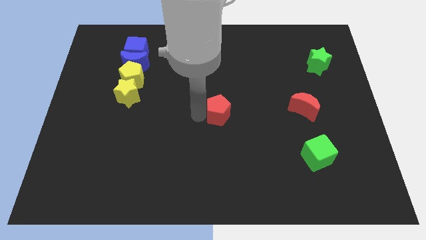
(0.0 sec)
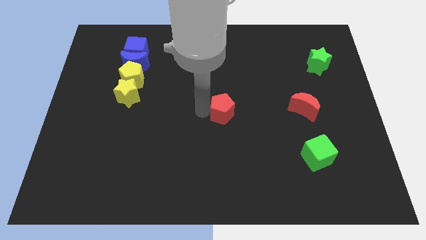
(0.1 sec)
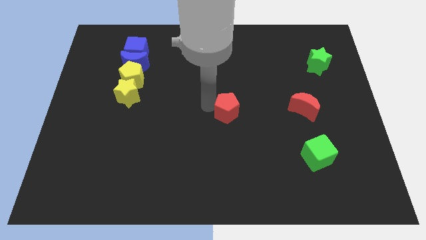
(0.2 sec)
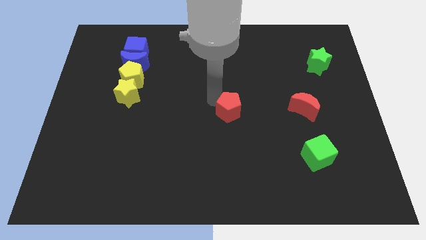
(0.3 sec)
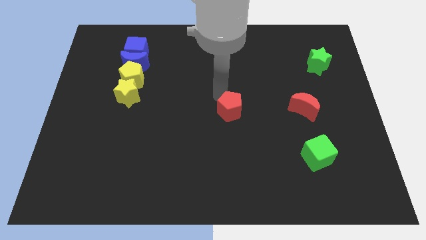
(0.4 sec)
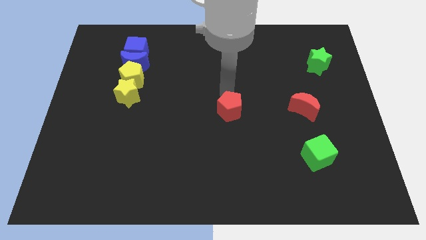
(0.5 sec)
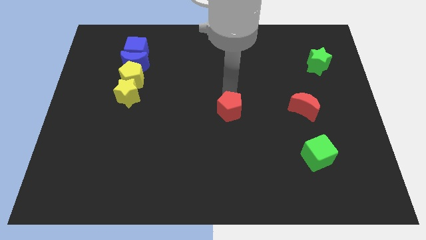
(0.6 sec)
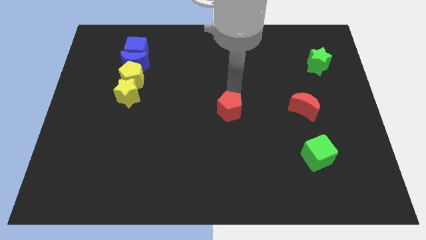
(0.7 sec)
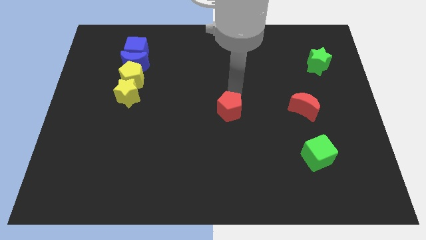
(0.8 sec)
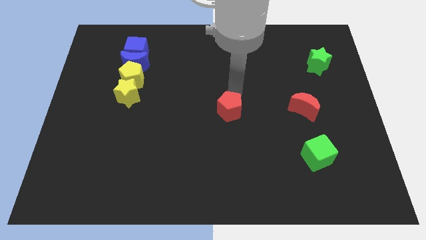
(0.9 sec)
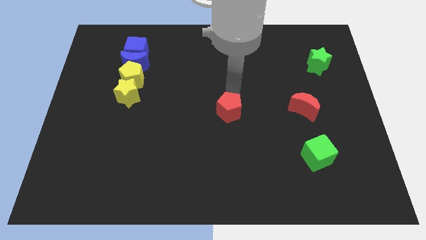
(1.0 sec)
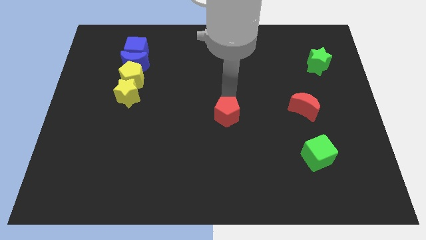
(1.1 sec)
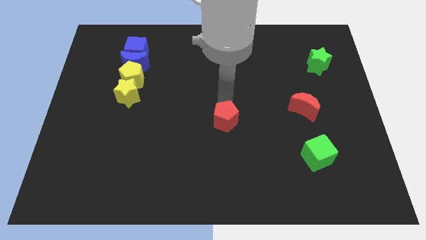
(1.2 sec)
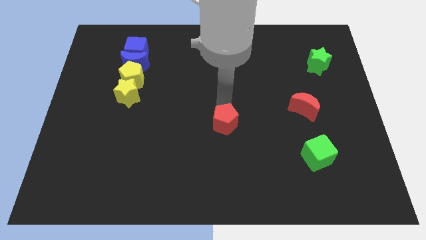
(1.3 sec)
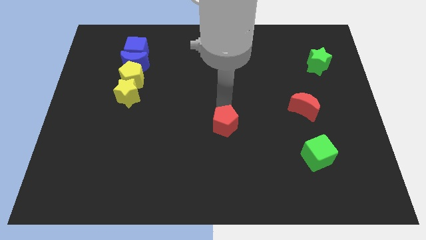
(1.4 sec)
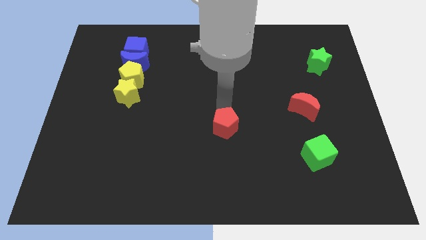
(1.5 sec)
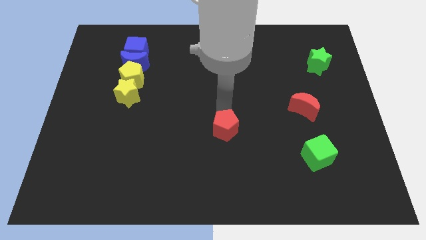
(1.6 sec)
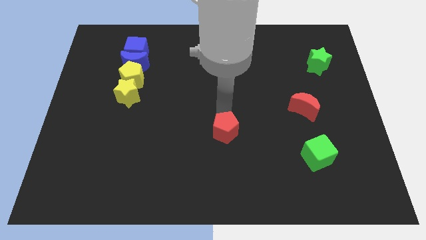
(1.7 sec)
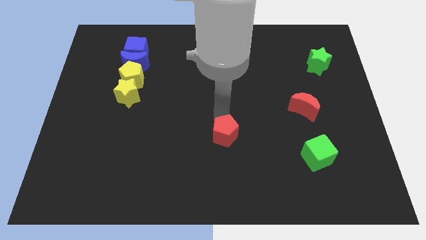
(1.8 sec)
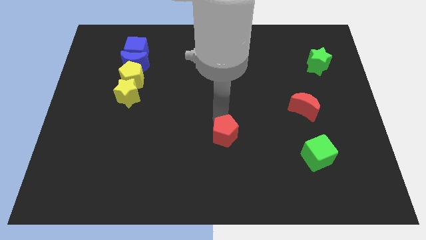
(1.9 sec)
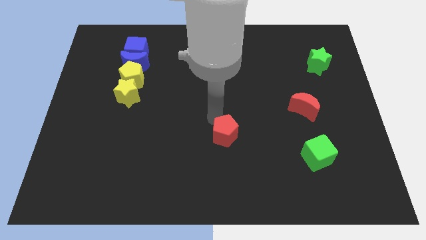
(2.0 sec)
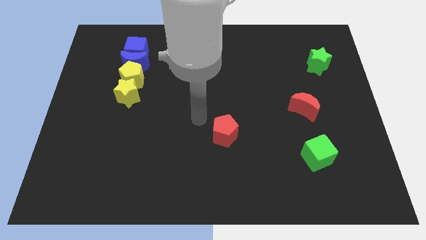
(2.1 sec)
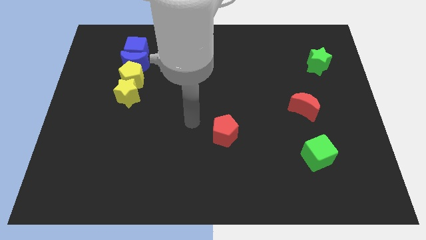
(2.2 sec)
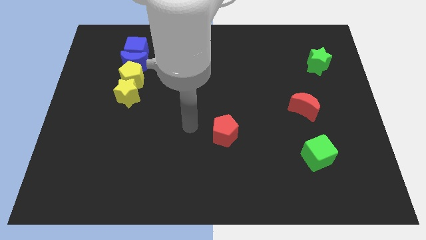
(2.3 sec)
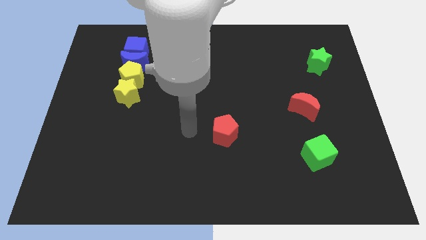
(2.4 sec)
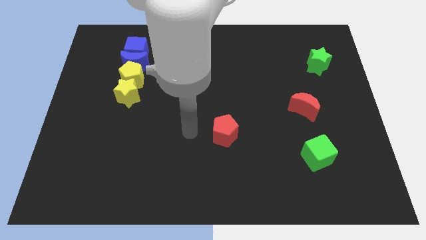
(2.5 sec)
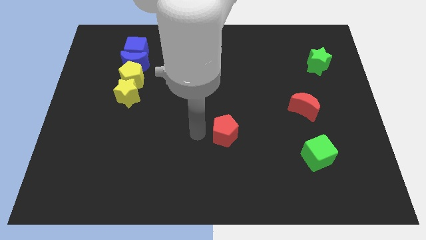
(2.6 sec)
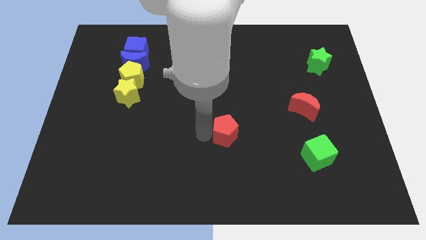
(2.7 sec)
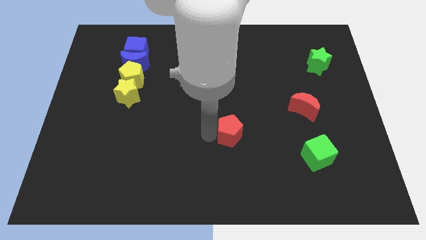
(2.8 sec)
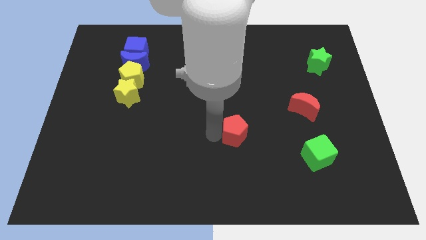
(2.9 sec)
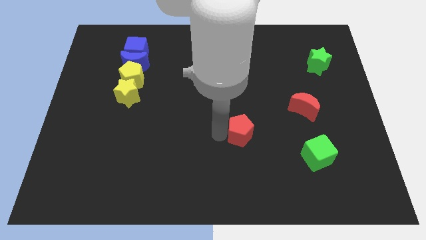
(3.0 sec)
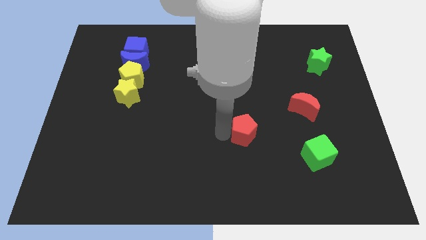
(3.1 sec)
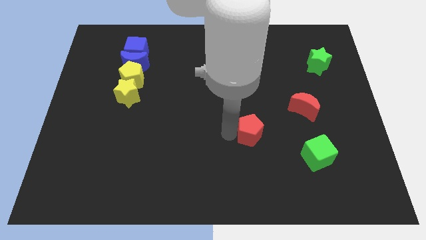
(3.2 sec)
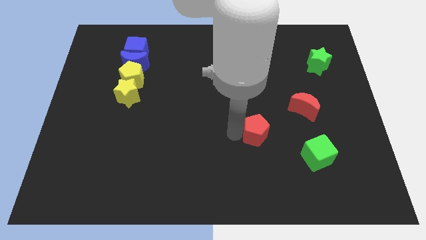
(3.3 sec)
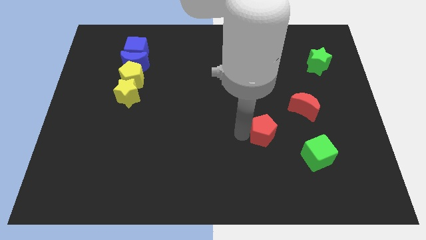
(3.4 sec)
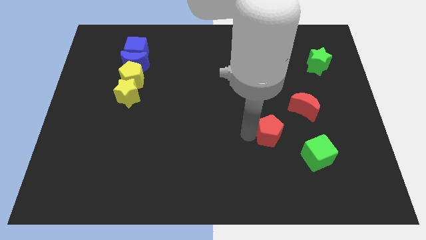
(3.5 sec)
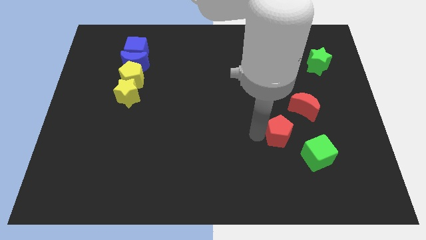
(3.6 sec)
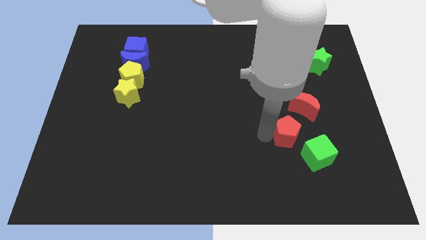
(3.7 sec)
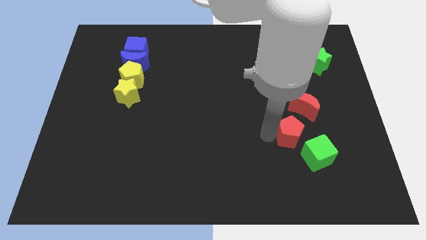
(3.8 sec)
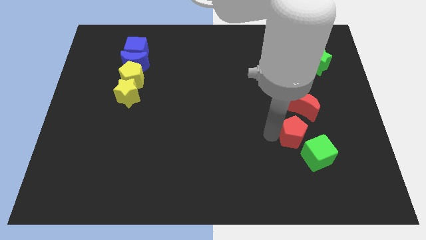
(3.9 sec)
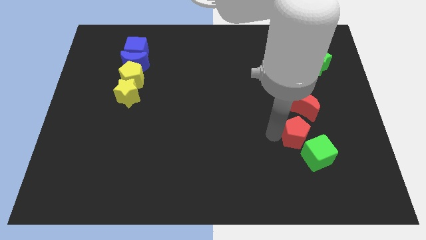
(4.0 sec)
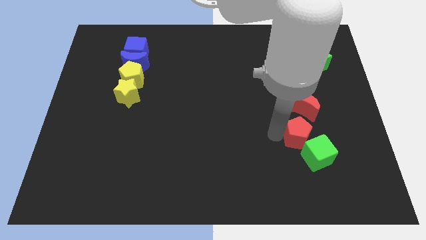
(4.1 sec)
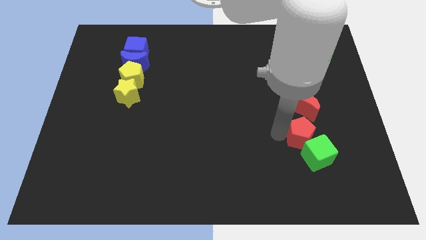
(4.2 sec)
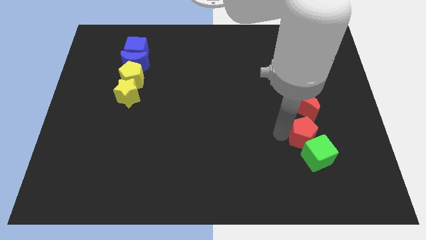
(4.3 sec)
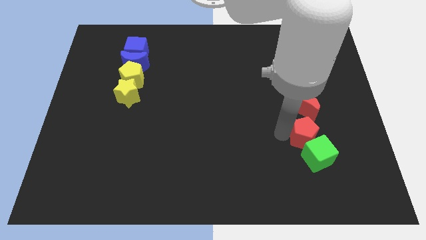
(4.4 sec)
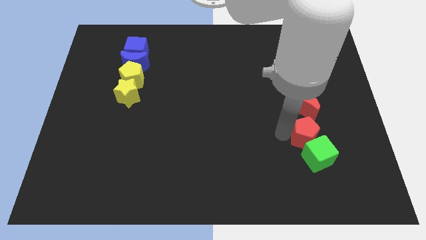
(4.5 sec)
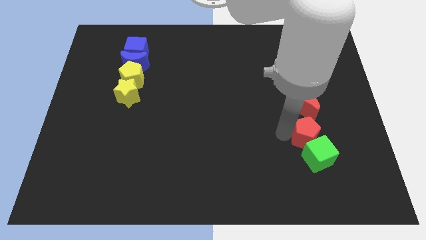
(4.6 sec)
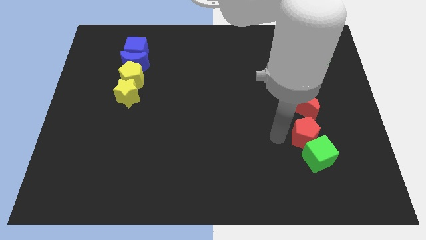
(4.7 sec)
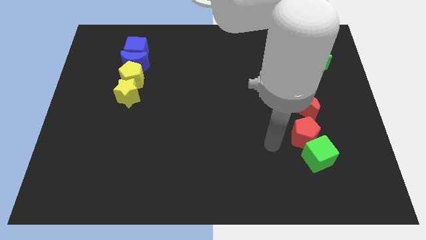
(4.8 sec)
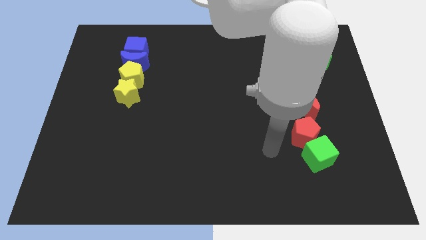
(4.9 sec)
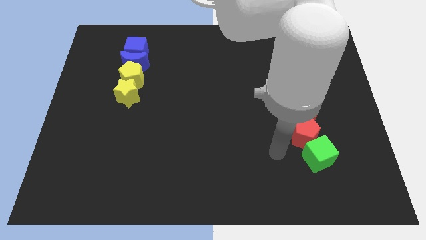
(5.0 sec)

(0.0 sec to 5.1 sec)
place the red pentagon above the green cube

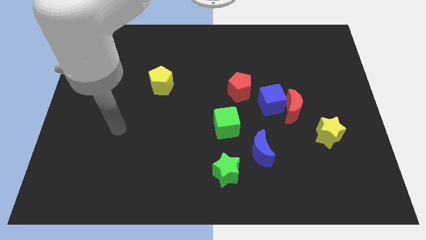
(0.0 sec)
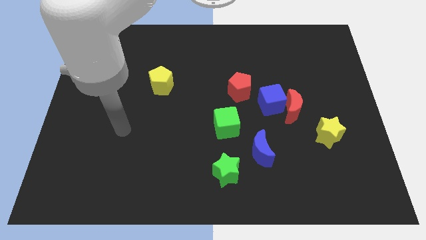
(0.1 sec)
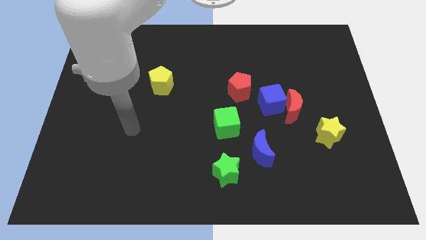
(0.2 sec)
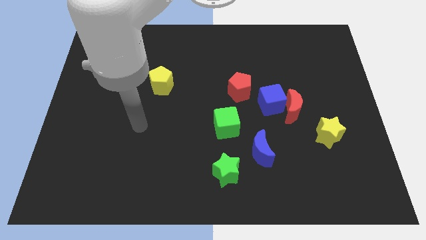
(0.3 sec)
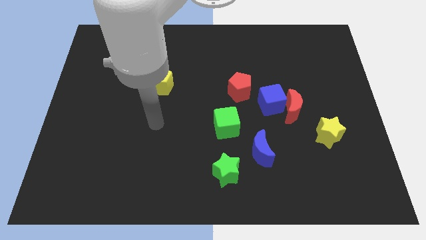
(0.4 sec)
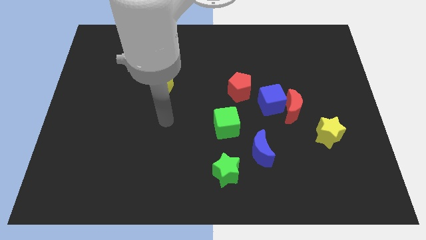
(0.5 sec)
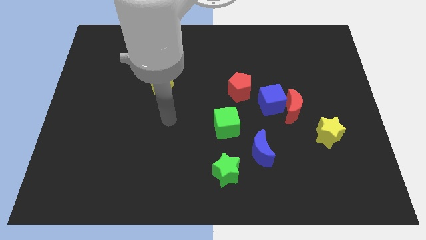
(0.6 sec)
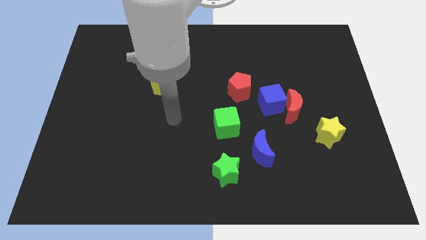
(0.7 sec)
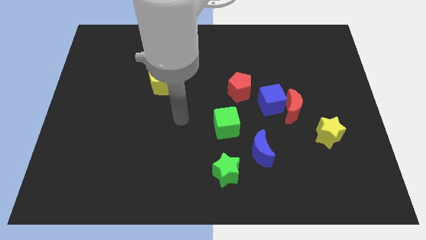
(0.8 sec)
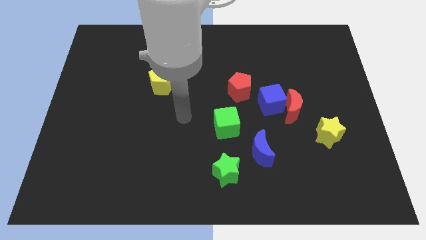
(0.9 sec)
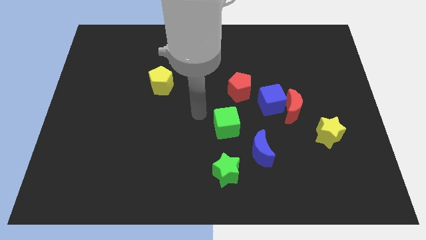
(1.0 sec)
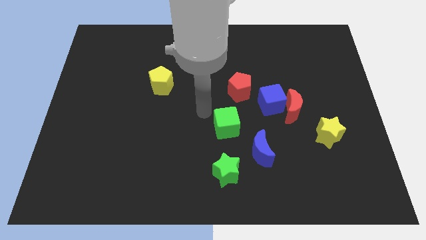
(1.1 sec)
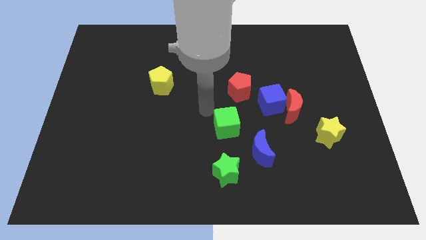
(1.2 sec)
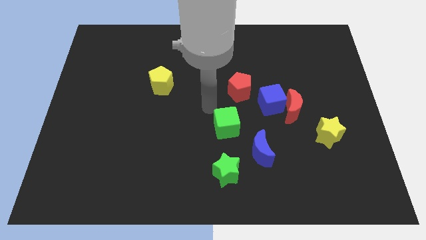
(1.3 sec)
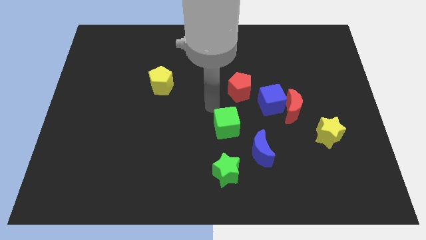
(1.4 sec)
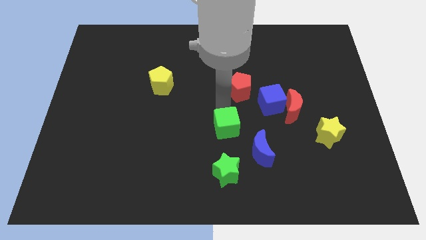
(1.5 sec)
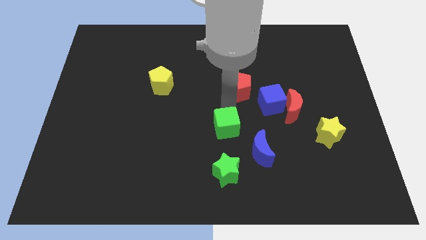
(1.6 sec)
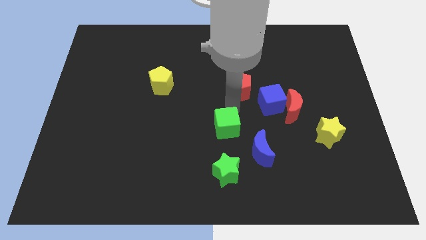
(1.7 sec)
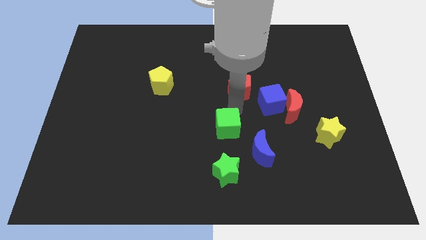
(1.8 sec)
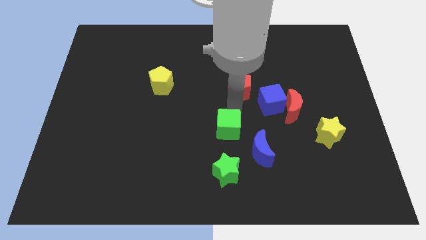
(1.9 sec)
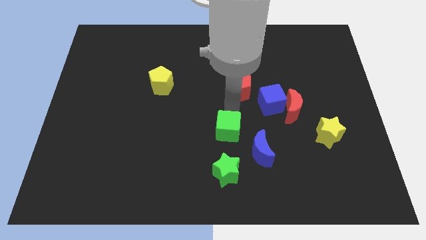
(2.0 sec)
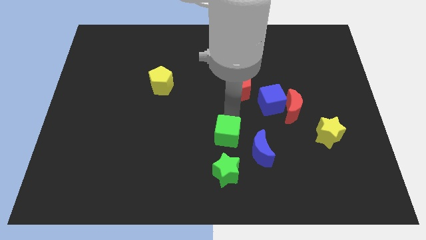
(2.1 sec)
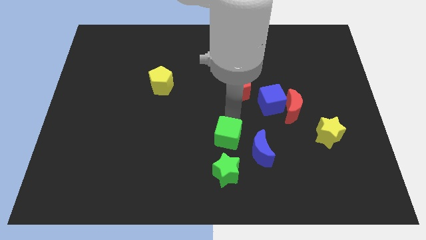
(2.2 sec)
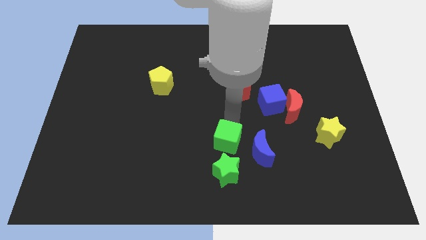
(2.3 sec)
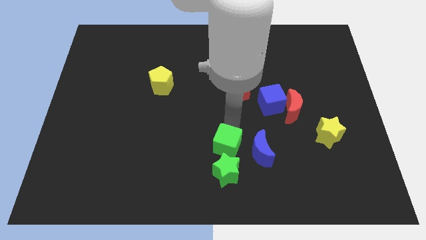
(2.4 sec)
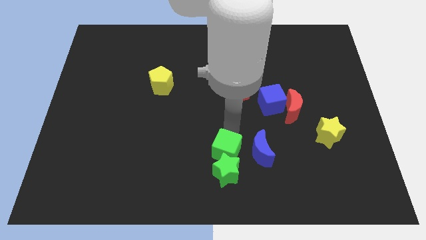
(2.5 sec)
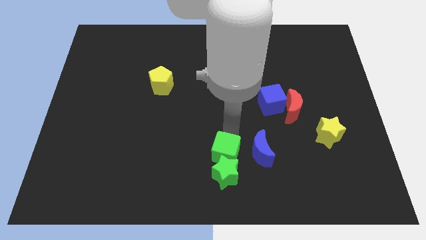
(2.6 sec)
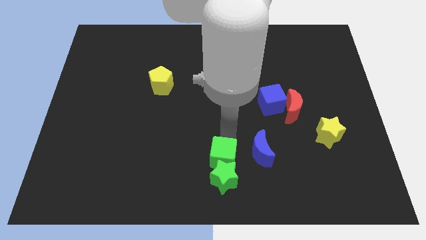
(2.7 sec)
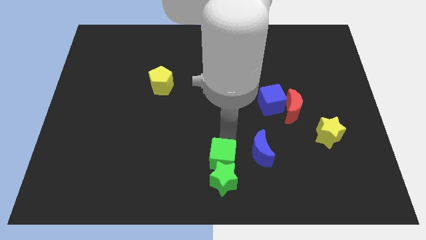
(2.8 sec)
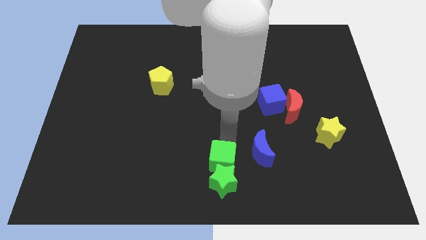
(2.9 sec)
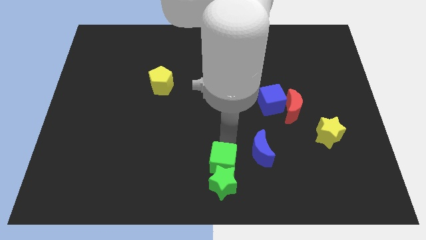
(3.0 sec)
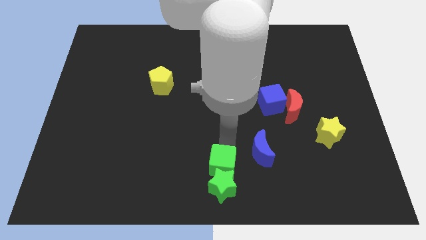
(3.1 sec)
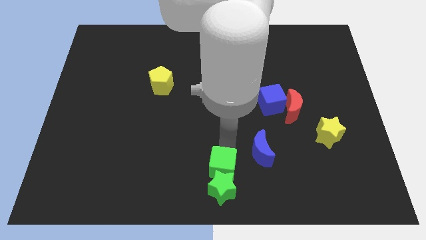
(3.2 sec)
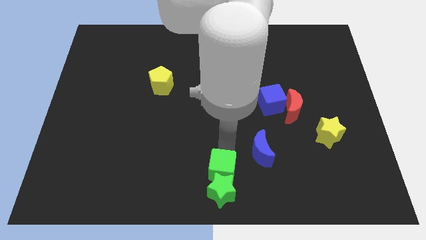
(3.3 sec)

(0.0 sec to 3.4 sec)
push green cube slightly to the downwards

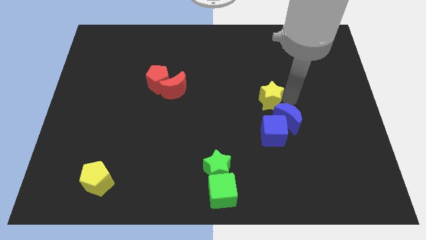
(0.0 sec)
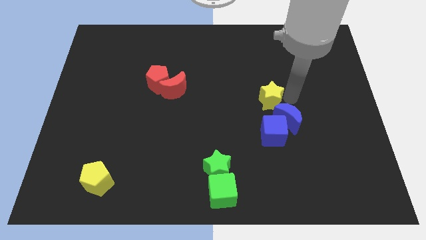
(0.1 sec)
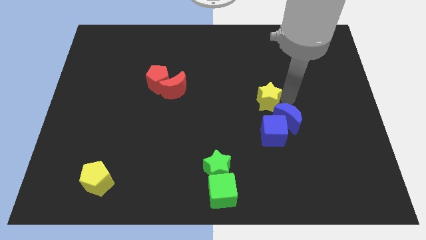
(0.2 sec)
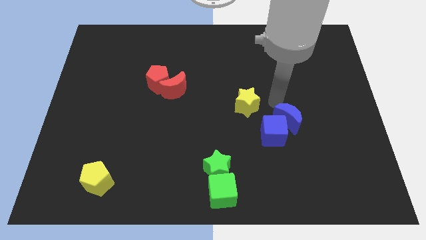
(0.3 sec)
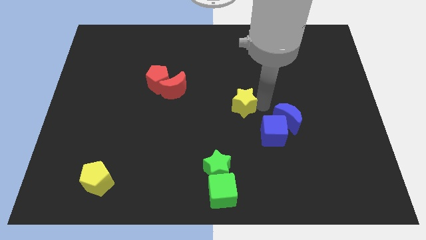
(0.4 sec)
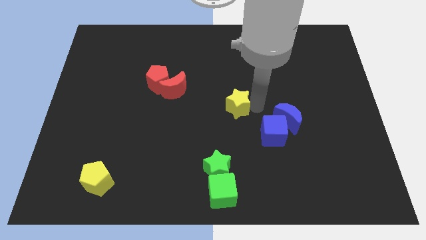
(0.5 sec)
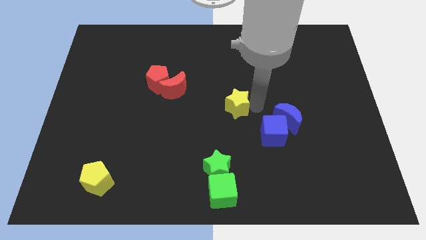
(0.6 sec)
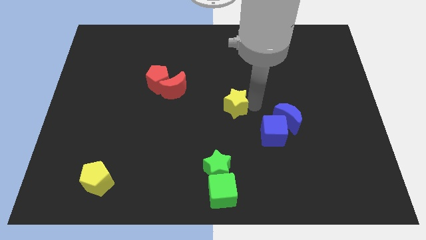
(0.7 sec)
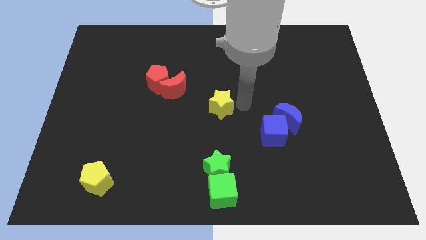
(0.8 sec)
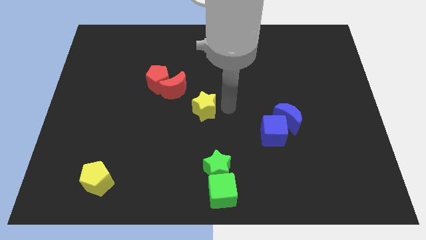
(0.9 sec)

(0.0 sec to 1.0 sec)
move the yellow star to the center of the board
